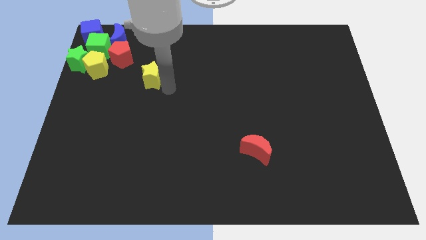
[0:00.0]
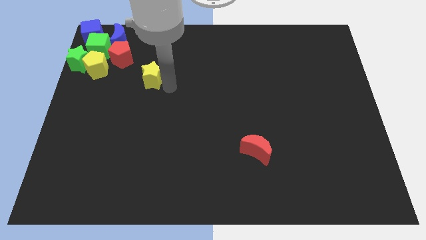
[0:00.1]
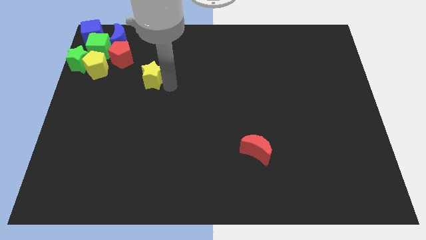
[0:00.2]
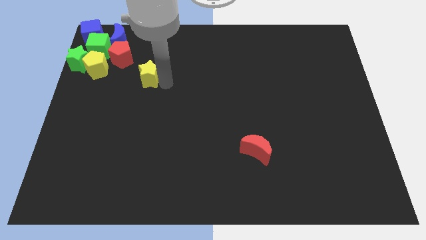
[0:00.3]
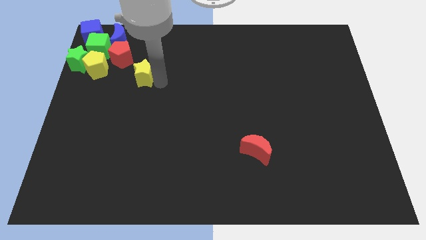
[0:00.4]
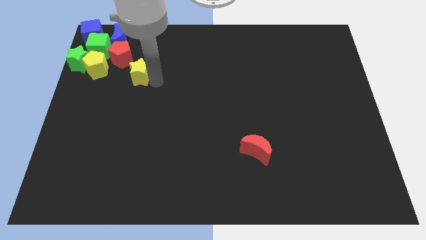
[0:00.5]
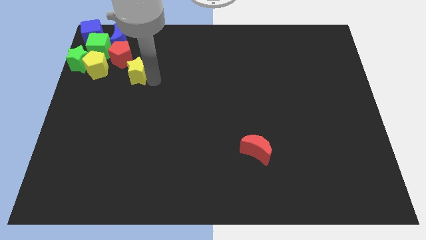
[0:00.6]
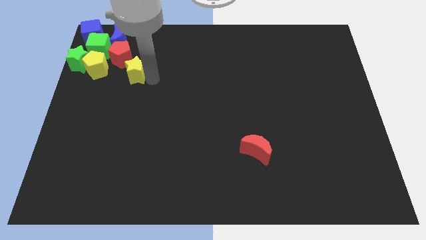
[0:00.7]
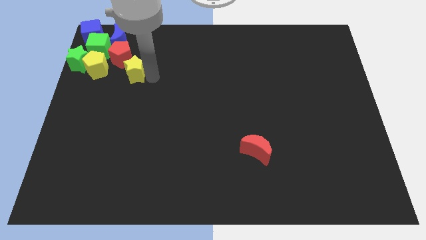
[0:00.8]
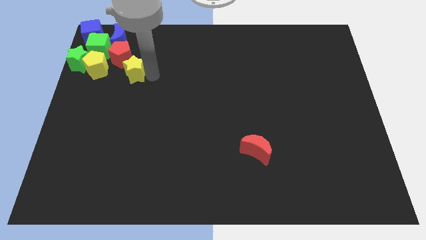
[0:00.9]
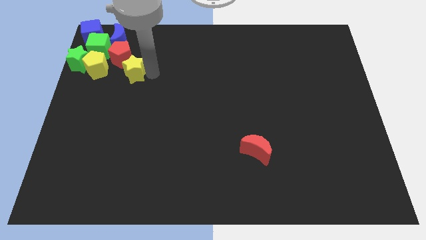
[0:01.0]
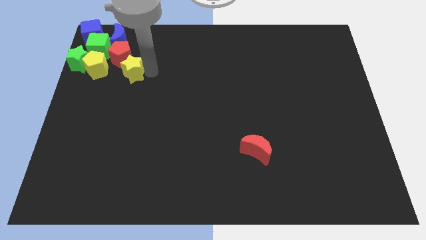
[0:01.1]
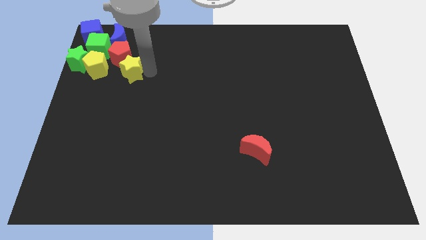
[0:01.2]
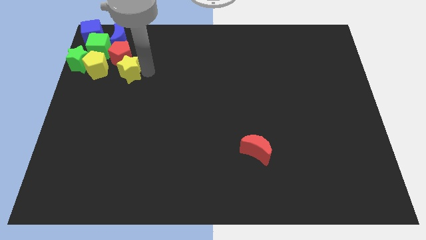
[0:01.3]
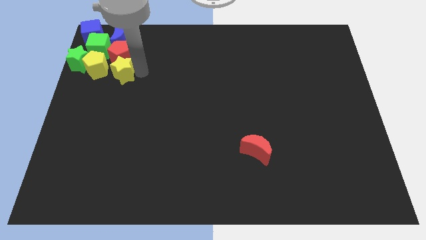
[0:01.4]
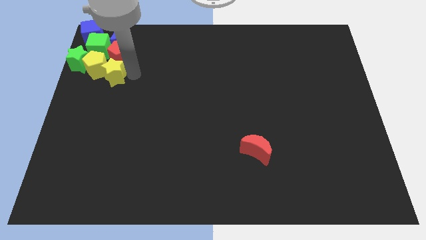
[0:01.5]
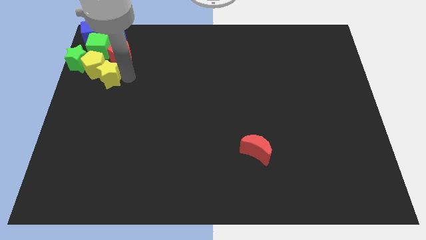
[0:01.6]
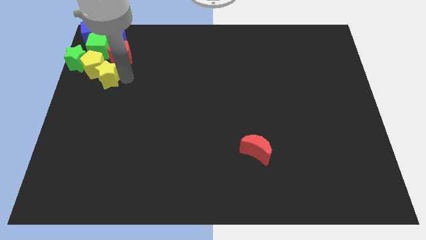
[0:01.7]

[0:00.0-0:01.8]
join the yellow star to the group of blocks

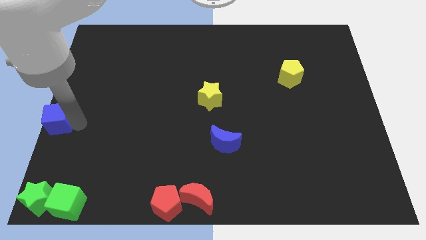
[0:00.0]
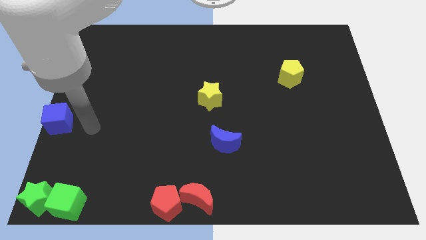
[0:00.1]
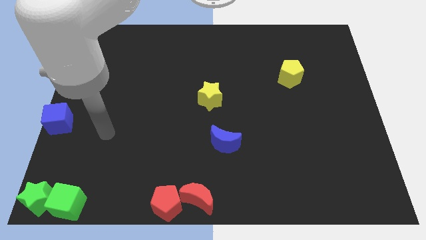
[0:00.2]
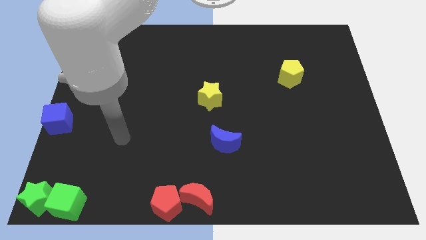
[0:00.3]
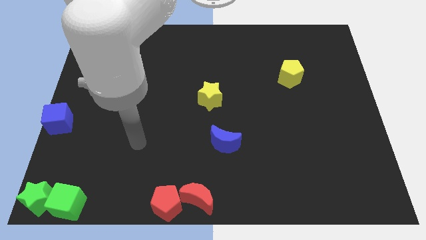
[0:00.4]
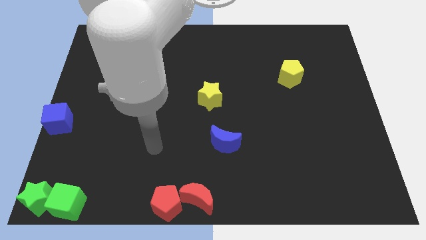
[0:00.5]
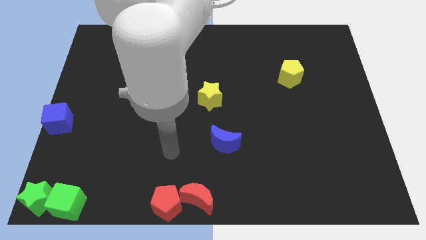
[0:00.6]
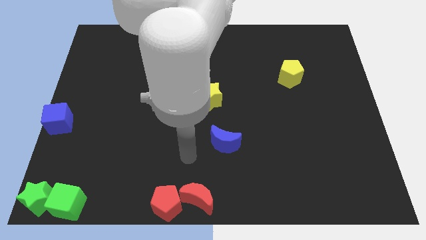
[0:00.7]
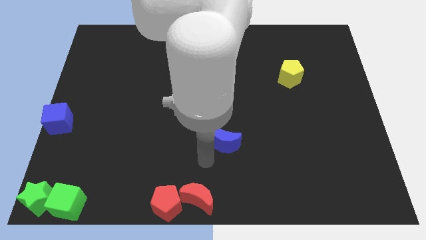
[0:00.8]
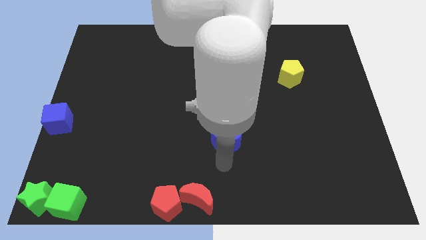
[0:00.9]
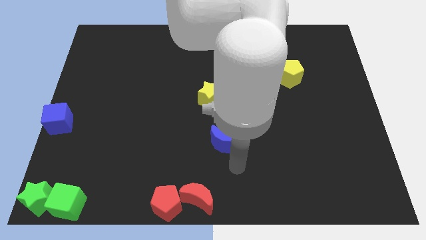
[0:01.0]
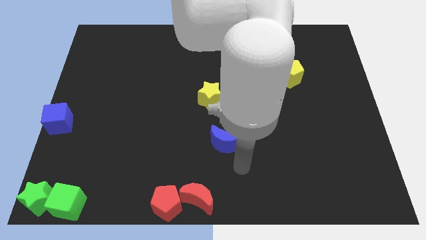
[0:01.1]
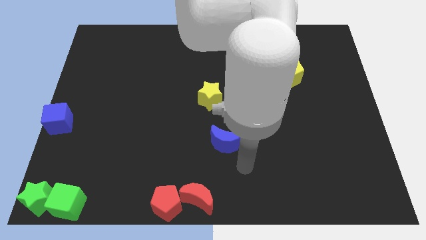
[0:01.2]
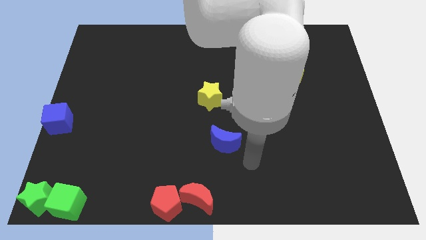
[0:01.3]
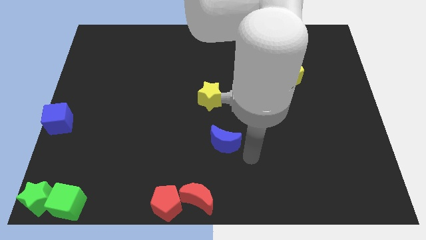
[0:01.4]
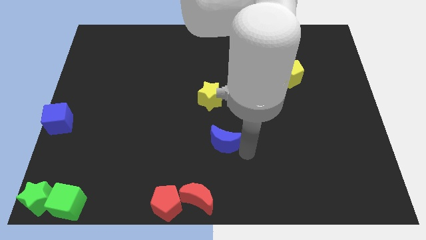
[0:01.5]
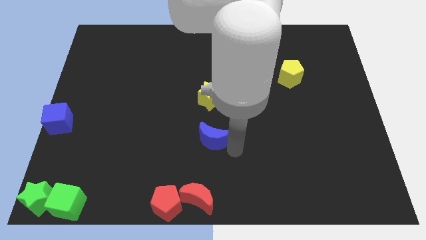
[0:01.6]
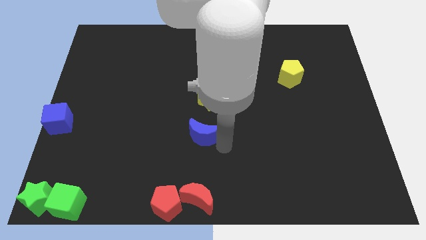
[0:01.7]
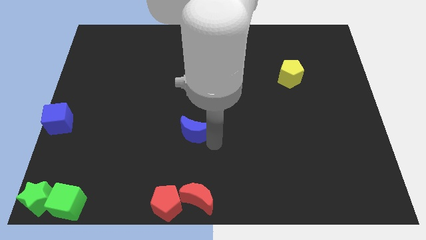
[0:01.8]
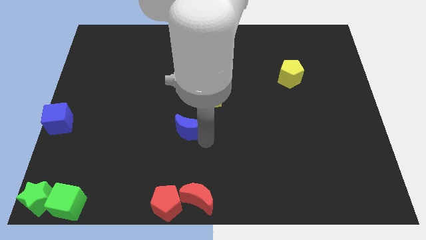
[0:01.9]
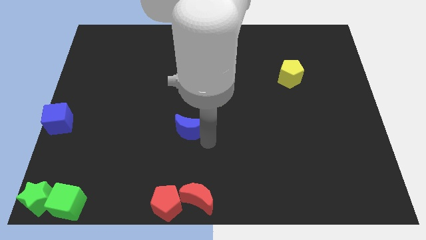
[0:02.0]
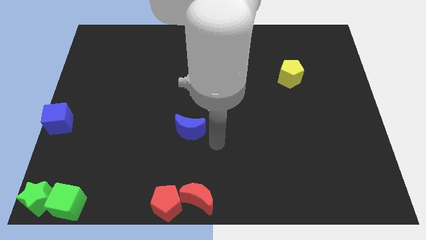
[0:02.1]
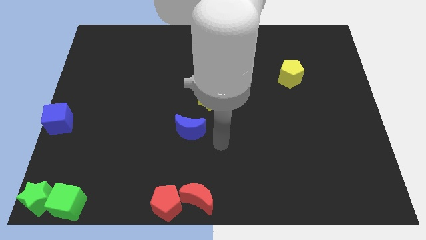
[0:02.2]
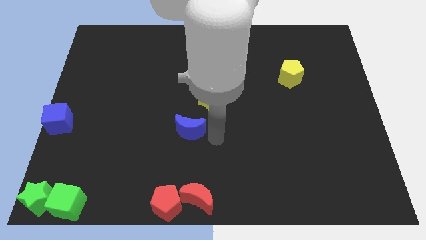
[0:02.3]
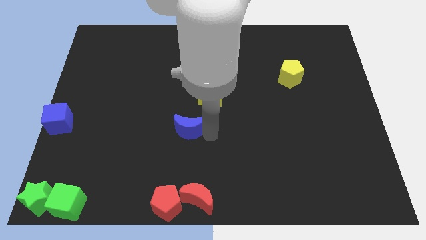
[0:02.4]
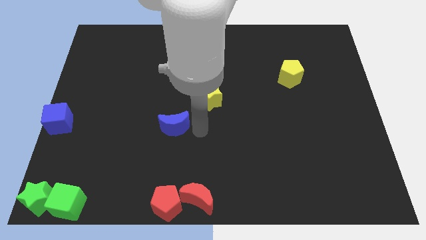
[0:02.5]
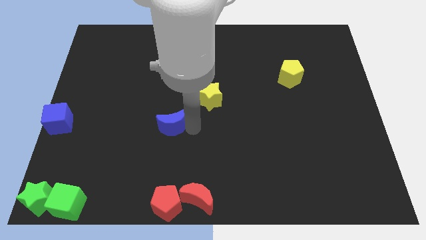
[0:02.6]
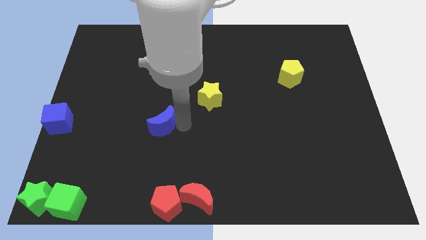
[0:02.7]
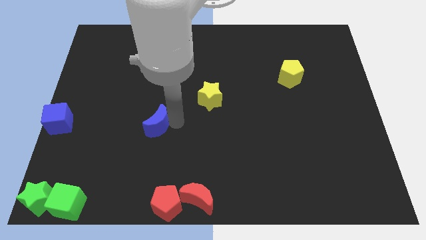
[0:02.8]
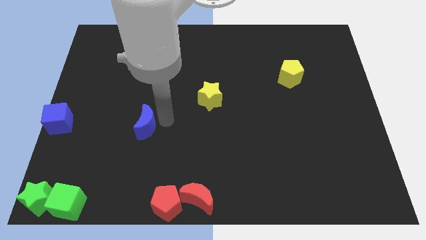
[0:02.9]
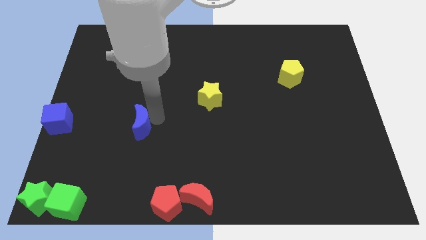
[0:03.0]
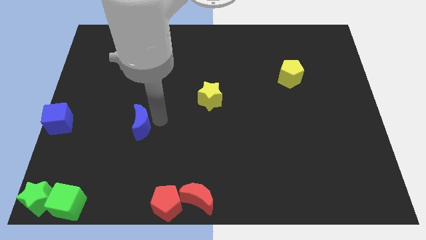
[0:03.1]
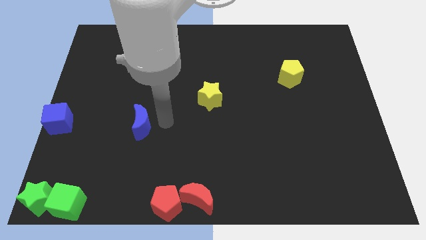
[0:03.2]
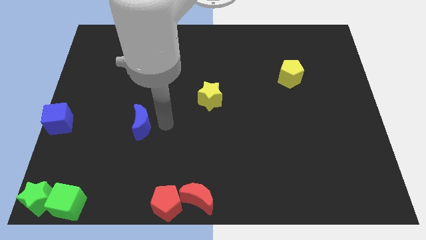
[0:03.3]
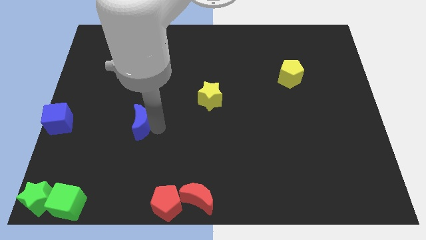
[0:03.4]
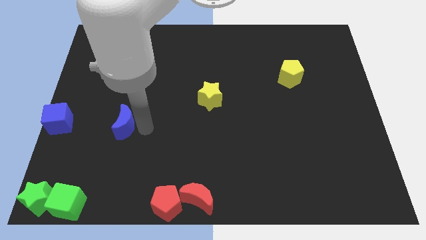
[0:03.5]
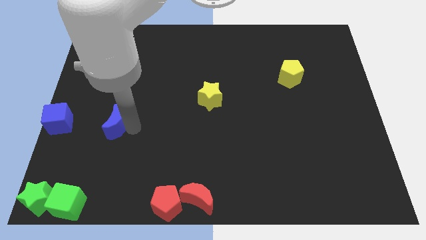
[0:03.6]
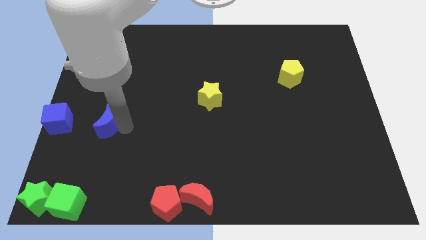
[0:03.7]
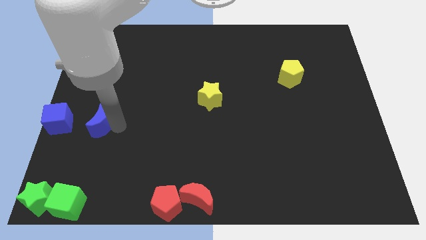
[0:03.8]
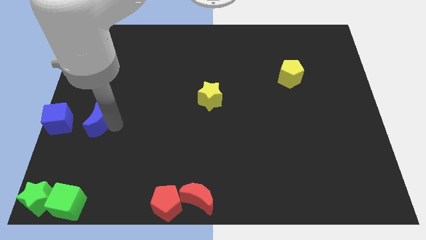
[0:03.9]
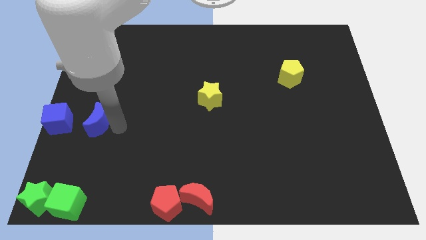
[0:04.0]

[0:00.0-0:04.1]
move the blue moon to the right of blue cube

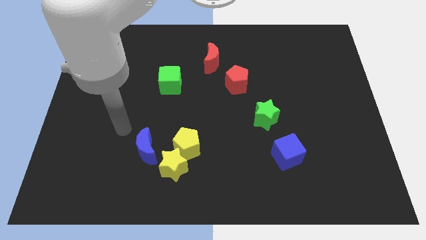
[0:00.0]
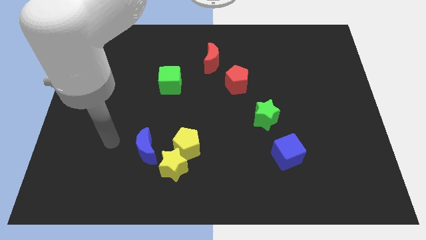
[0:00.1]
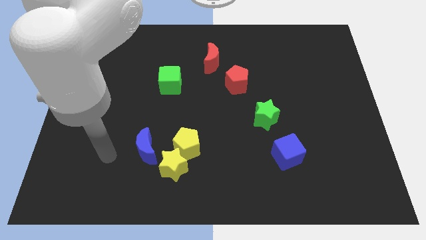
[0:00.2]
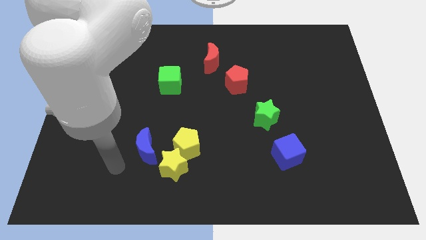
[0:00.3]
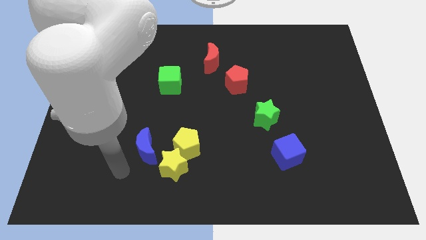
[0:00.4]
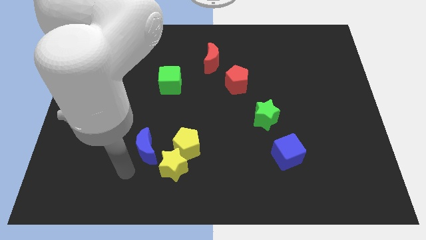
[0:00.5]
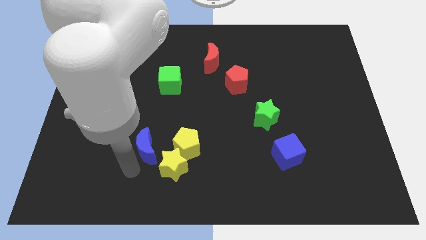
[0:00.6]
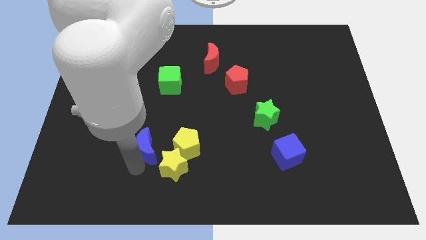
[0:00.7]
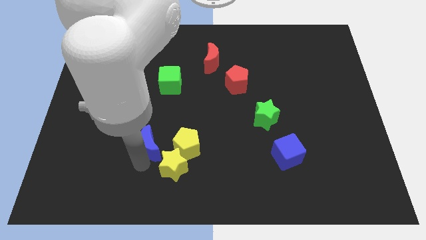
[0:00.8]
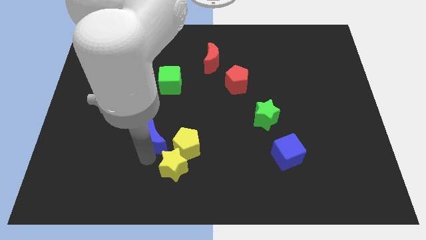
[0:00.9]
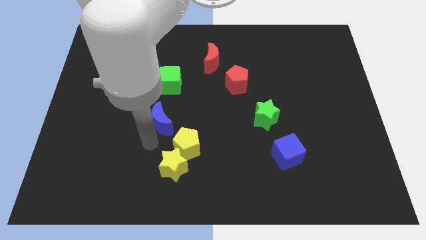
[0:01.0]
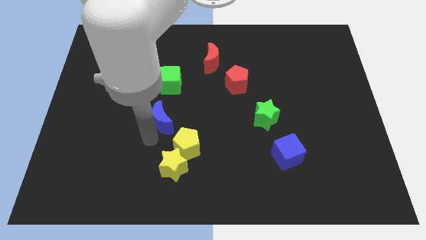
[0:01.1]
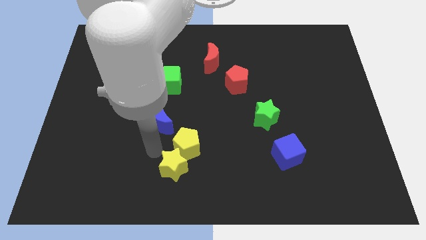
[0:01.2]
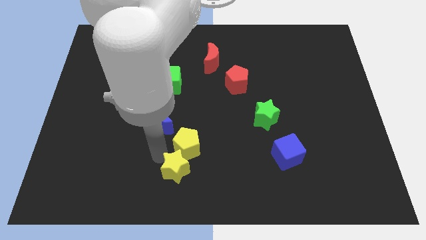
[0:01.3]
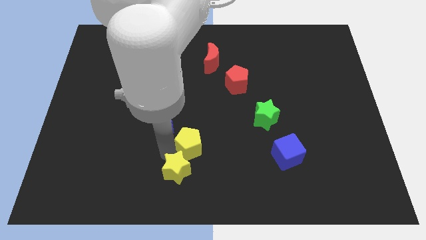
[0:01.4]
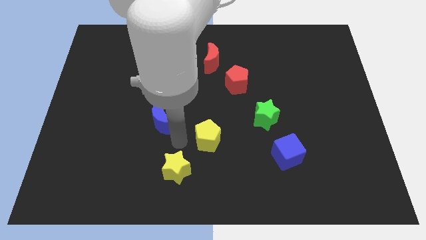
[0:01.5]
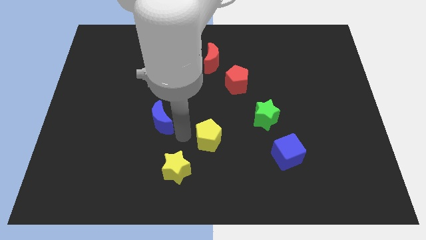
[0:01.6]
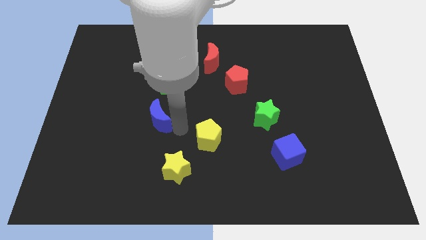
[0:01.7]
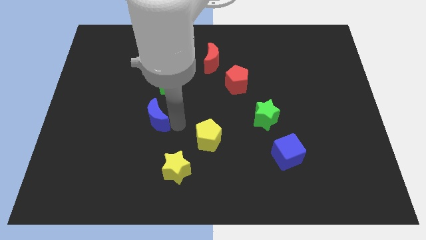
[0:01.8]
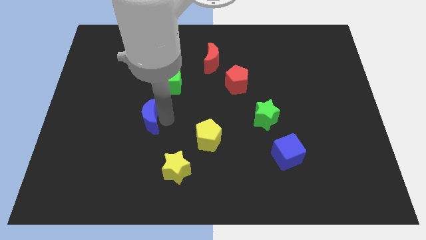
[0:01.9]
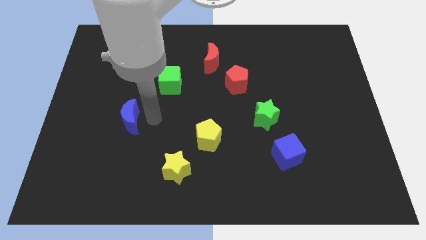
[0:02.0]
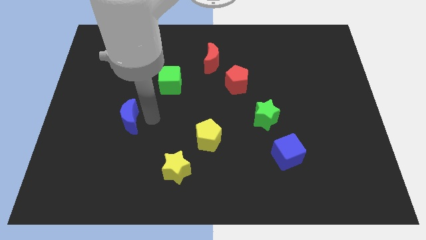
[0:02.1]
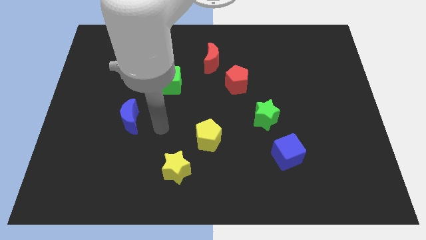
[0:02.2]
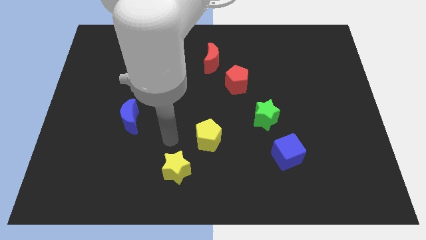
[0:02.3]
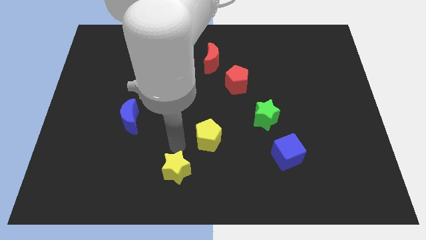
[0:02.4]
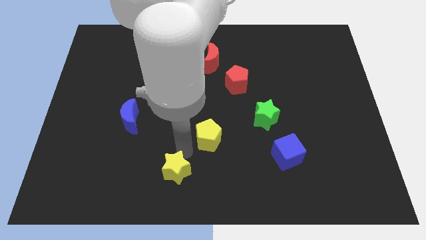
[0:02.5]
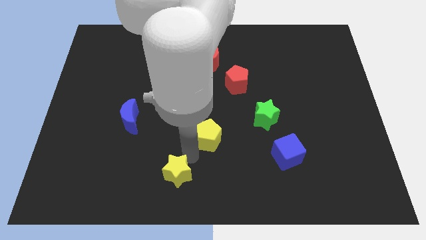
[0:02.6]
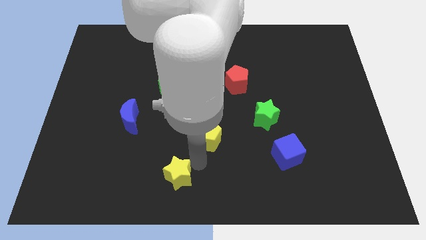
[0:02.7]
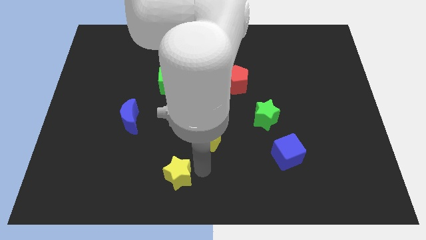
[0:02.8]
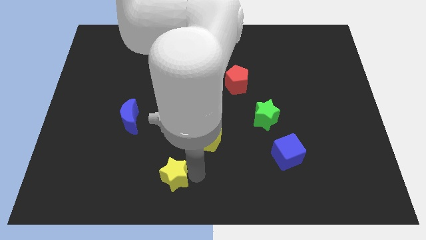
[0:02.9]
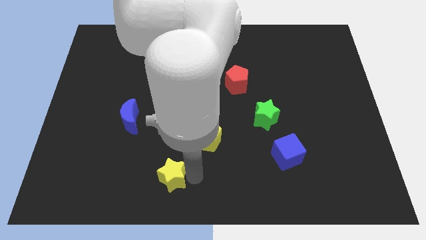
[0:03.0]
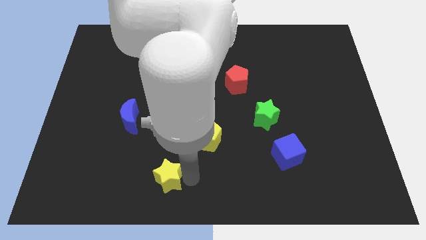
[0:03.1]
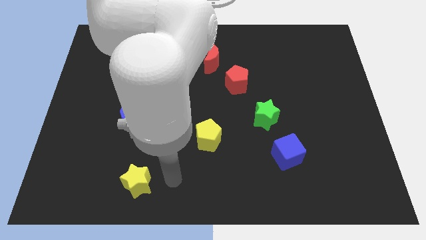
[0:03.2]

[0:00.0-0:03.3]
separate the yellow blocks and blue crescent
